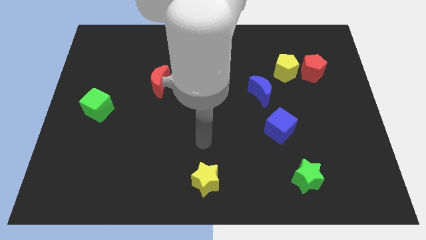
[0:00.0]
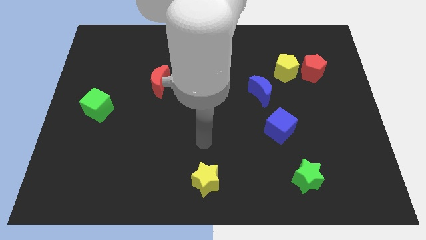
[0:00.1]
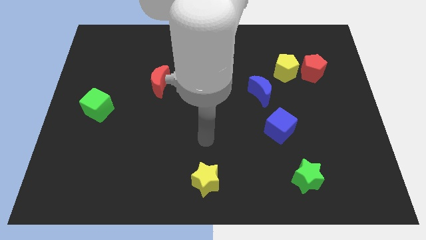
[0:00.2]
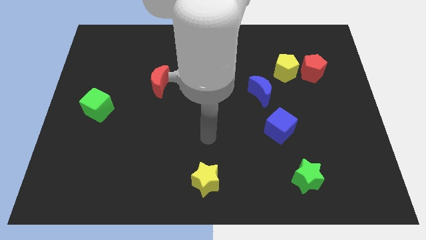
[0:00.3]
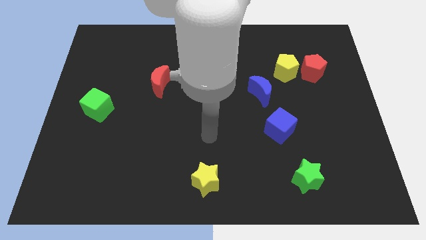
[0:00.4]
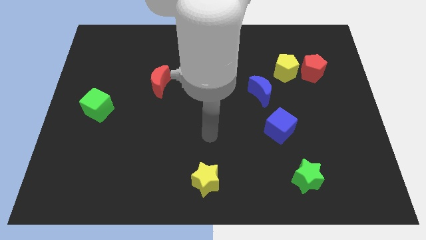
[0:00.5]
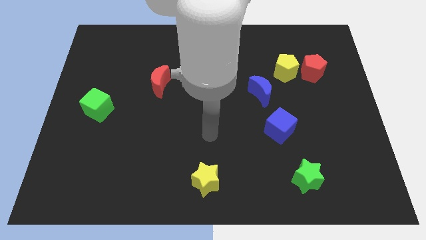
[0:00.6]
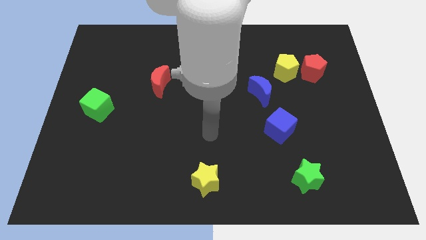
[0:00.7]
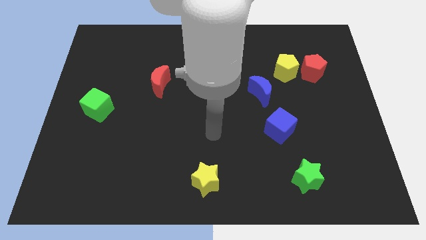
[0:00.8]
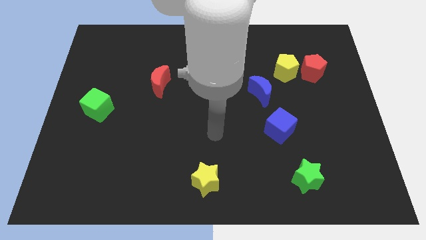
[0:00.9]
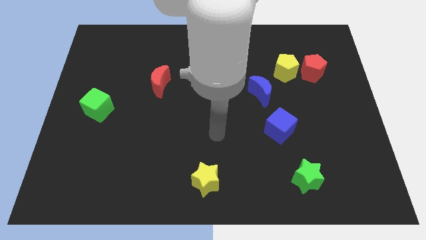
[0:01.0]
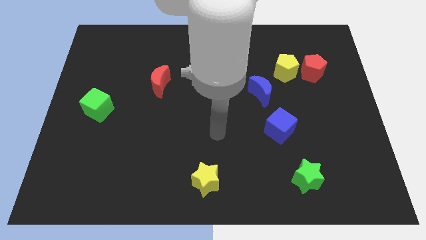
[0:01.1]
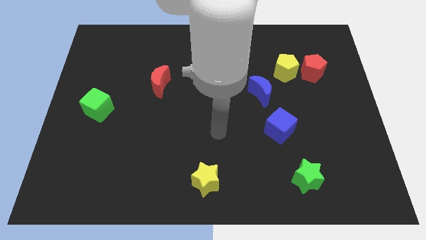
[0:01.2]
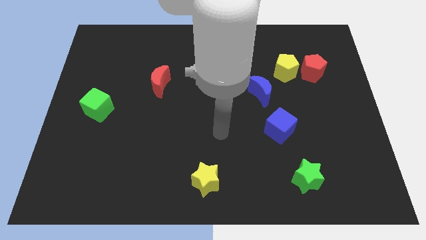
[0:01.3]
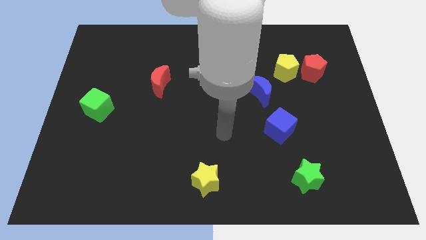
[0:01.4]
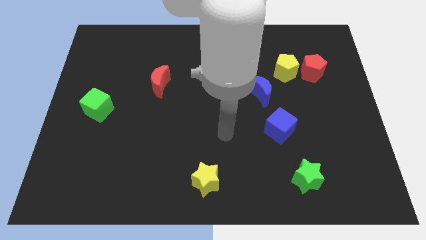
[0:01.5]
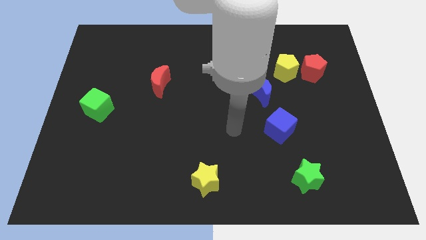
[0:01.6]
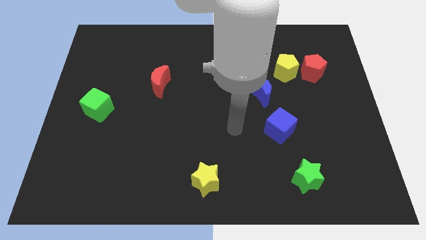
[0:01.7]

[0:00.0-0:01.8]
slide your hand diagonally top right to the yellow star

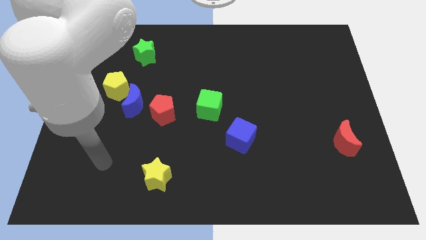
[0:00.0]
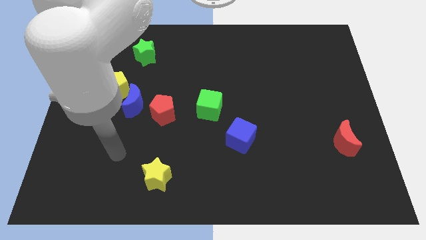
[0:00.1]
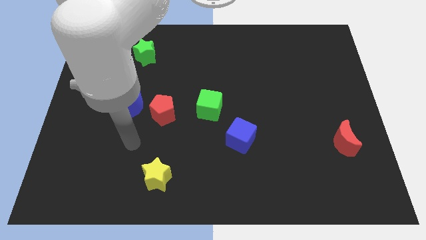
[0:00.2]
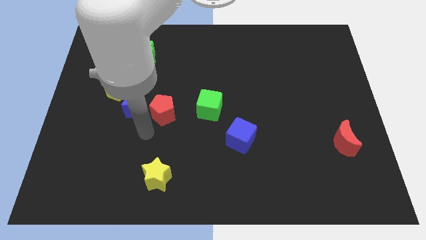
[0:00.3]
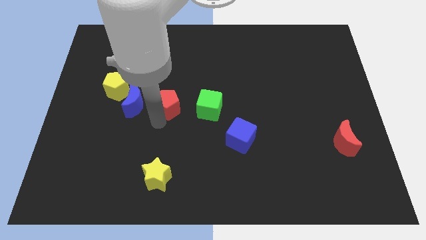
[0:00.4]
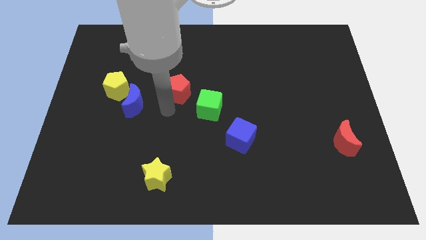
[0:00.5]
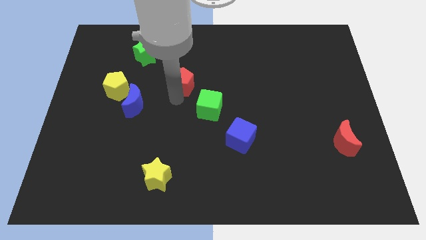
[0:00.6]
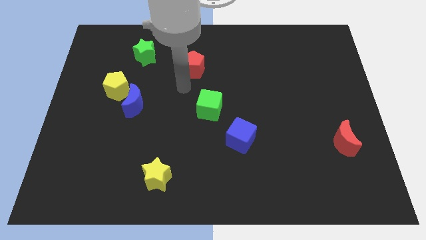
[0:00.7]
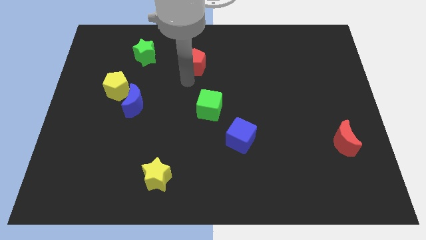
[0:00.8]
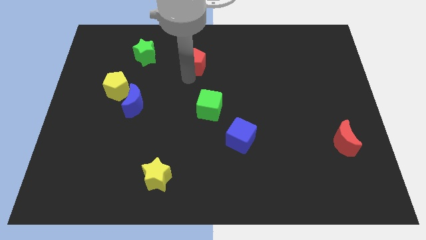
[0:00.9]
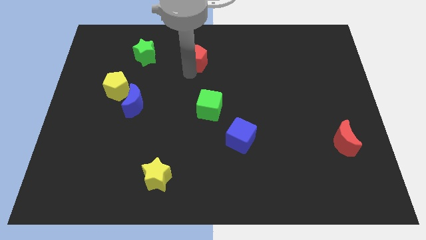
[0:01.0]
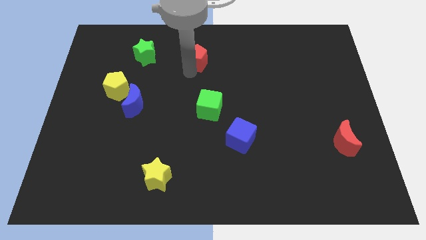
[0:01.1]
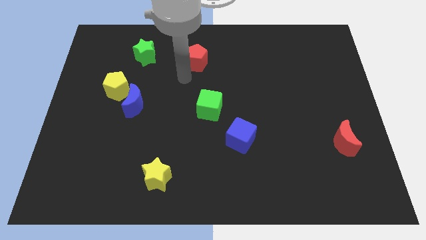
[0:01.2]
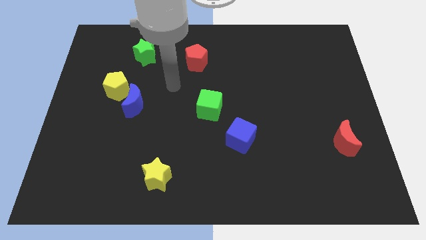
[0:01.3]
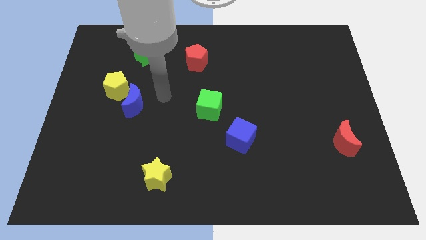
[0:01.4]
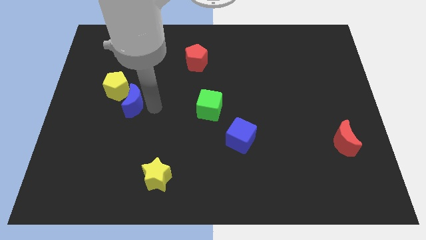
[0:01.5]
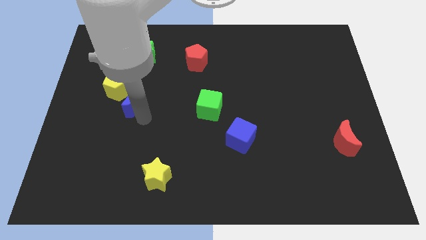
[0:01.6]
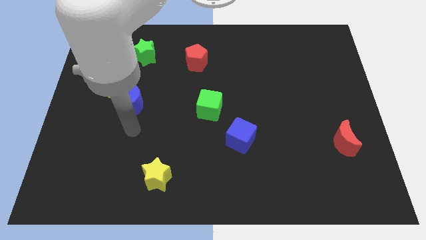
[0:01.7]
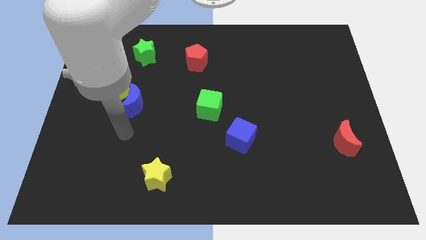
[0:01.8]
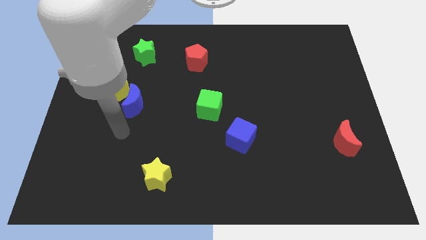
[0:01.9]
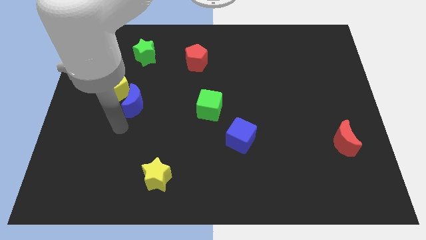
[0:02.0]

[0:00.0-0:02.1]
move the red pentagon to the top center of the board

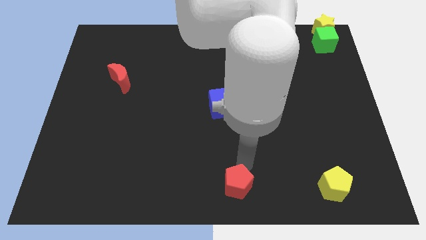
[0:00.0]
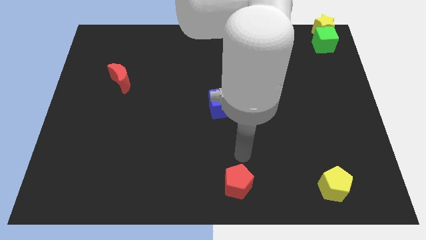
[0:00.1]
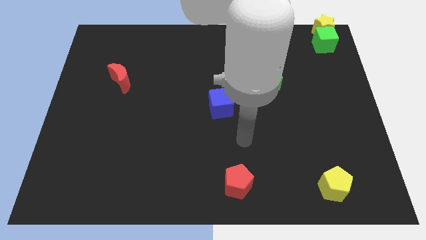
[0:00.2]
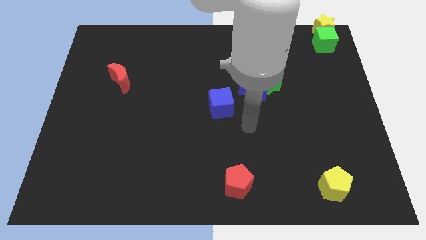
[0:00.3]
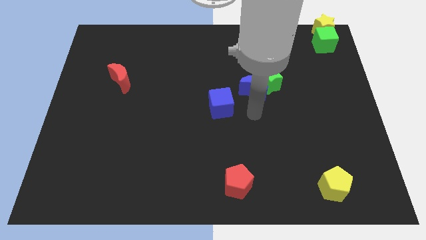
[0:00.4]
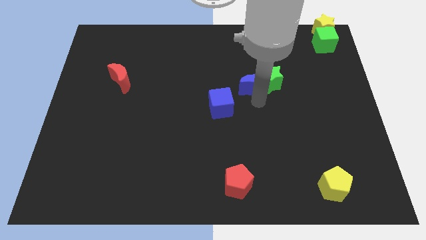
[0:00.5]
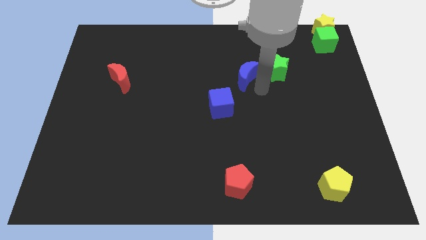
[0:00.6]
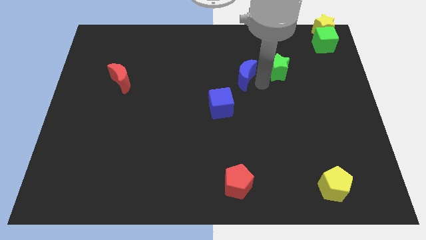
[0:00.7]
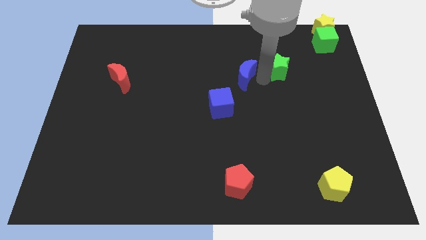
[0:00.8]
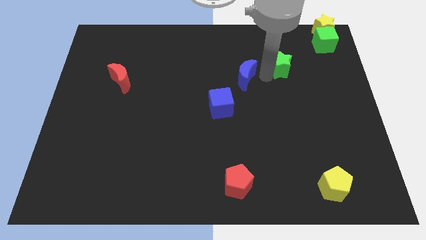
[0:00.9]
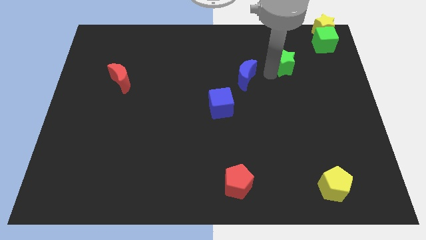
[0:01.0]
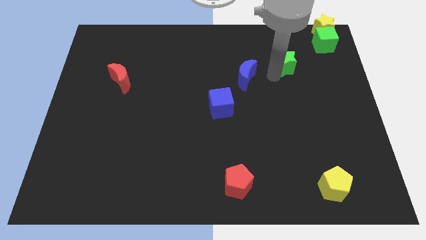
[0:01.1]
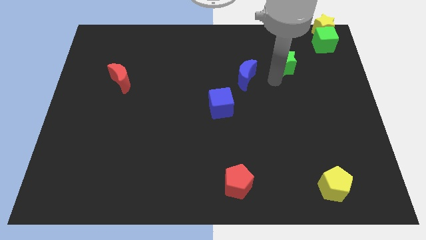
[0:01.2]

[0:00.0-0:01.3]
seperate blue moon and green star

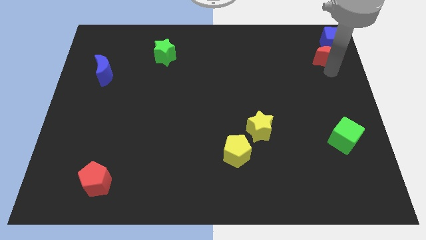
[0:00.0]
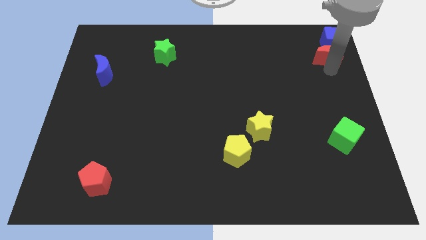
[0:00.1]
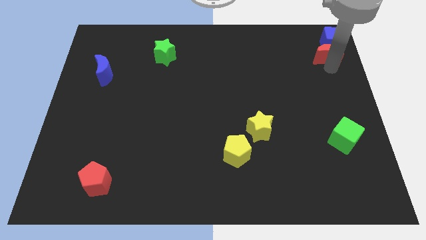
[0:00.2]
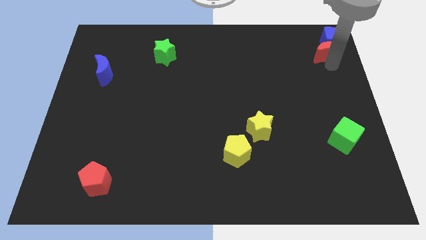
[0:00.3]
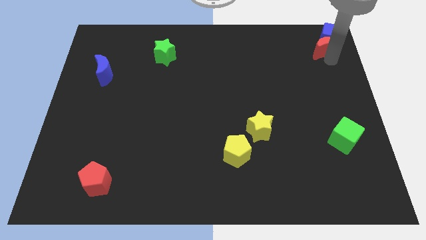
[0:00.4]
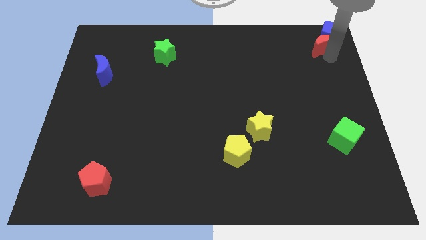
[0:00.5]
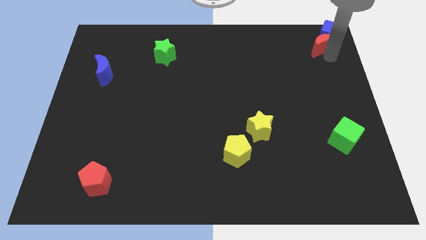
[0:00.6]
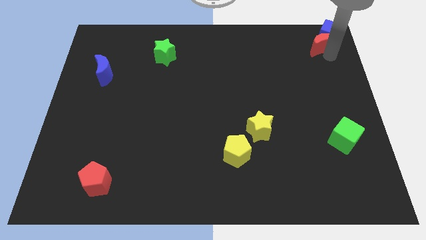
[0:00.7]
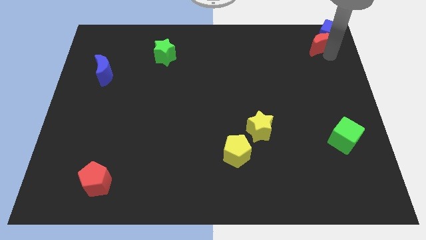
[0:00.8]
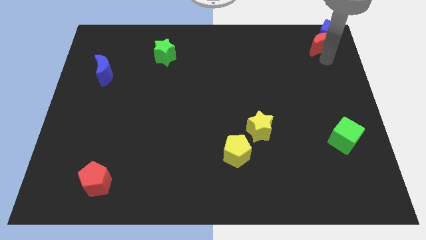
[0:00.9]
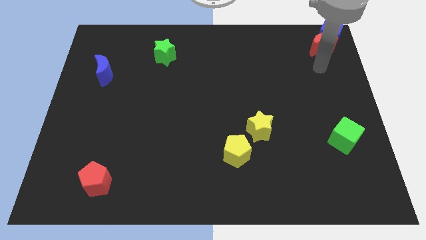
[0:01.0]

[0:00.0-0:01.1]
push the red moon into the blue cube

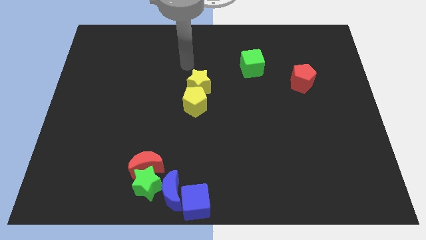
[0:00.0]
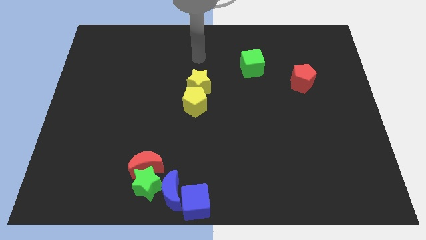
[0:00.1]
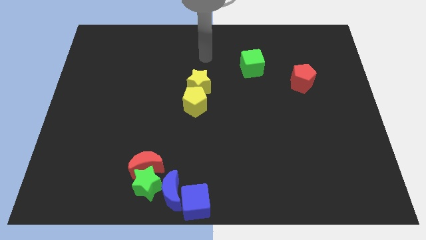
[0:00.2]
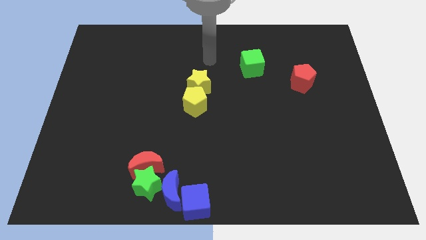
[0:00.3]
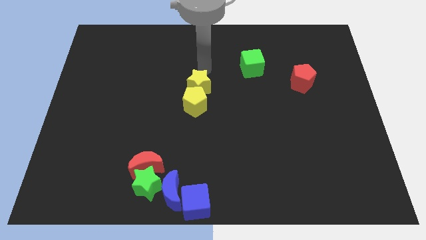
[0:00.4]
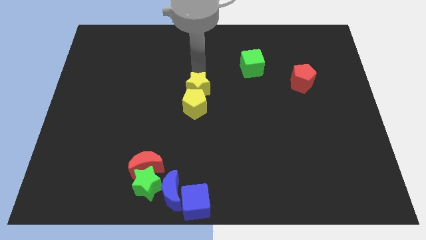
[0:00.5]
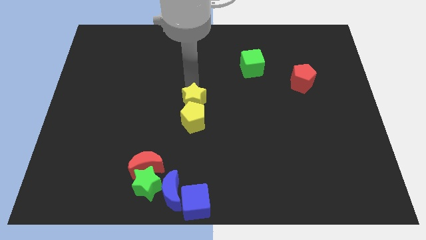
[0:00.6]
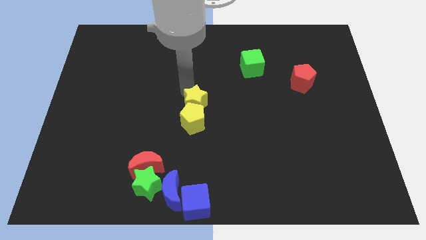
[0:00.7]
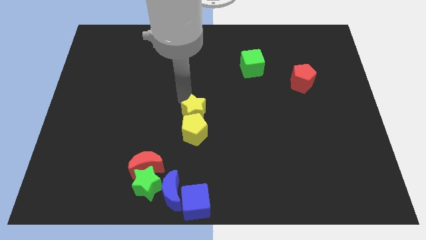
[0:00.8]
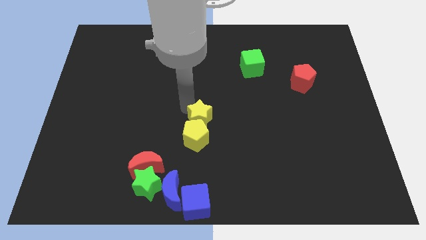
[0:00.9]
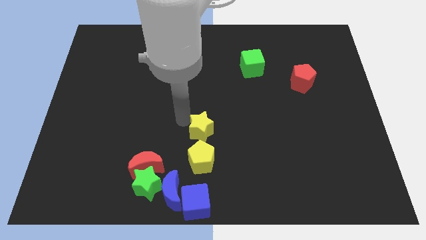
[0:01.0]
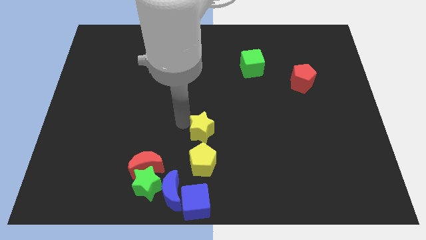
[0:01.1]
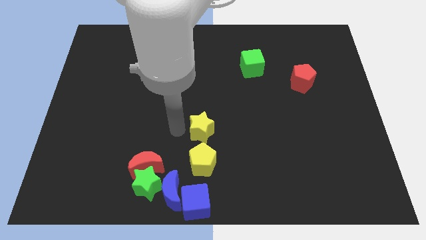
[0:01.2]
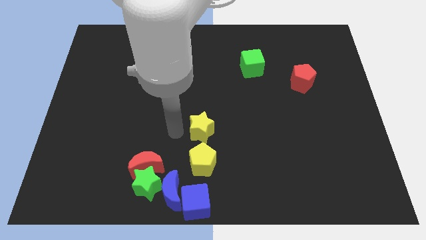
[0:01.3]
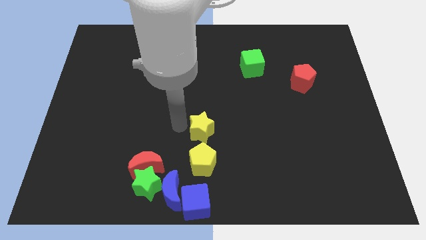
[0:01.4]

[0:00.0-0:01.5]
push the yellow star with yellow pentagon towards the bottom center of the board

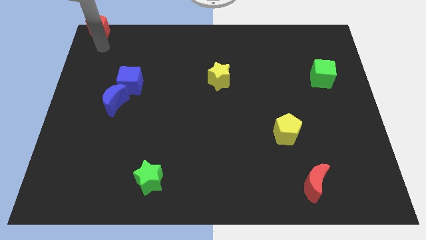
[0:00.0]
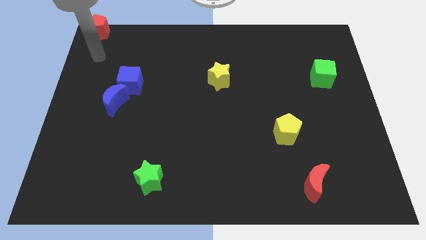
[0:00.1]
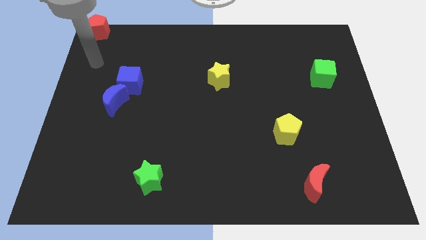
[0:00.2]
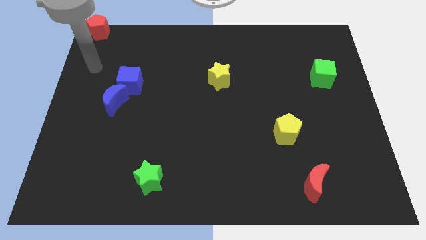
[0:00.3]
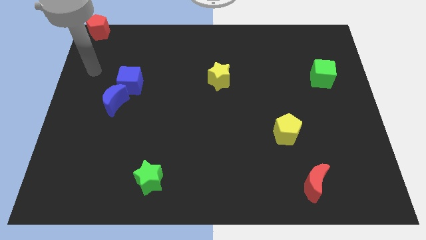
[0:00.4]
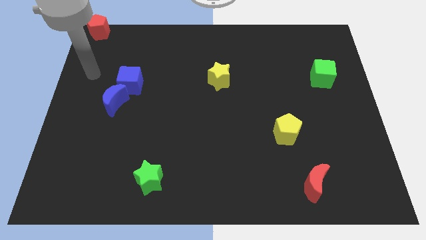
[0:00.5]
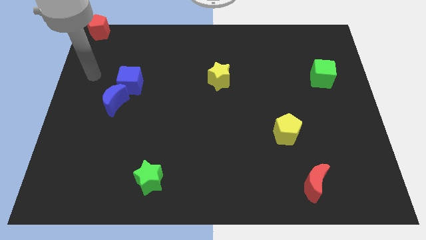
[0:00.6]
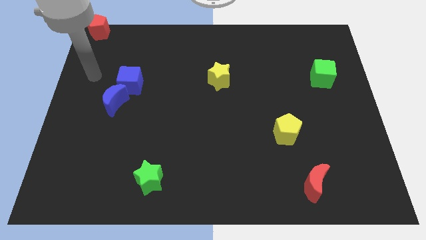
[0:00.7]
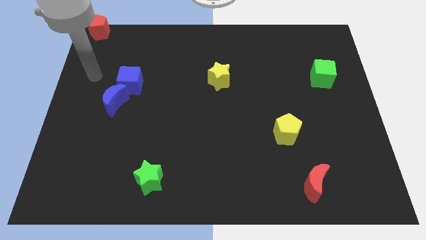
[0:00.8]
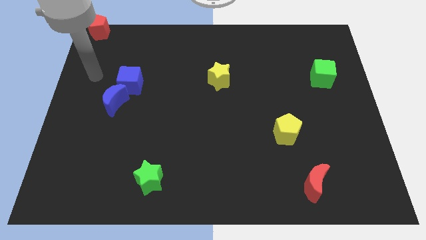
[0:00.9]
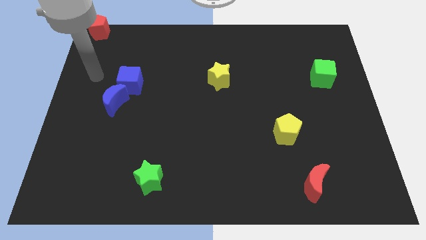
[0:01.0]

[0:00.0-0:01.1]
point your hand at the left side of the blue cube
